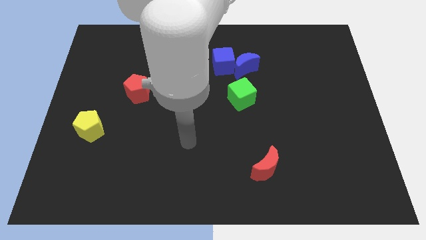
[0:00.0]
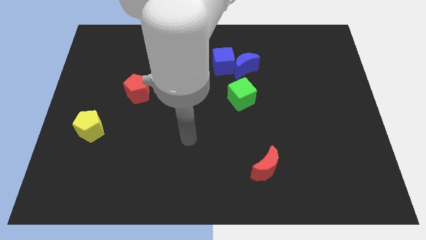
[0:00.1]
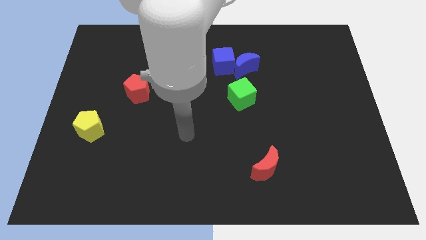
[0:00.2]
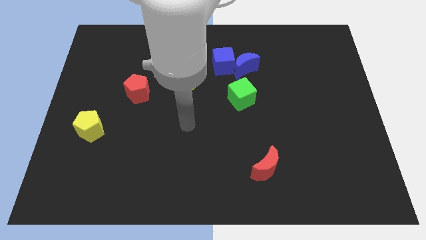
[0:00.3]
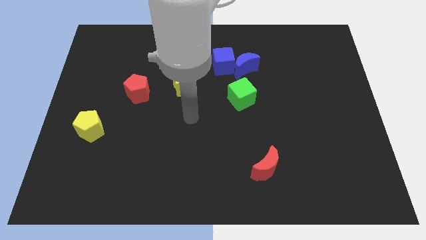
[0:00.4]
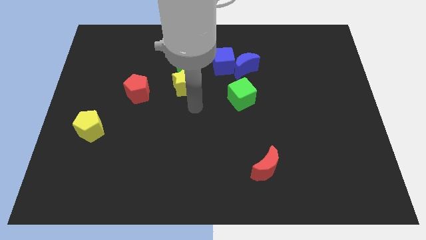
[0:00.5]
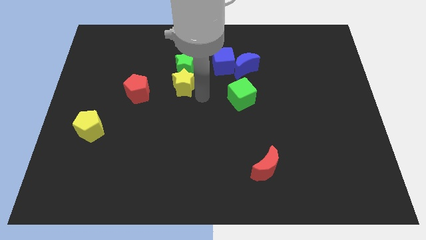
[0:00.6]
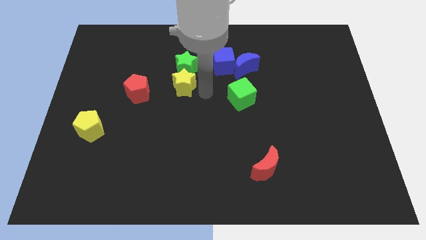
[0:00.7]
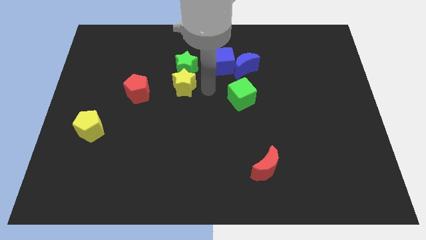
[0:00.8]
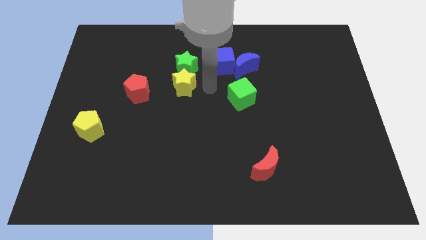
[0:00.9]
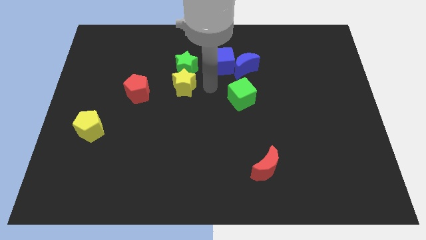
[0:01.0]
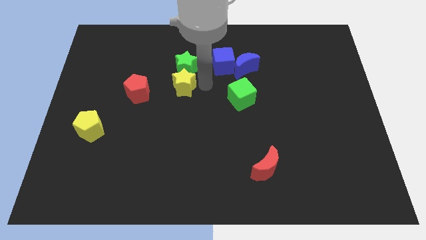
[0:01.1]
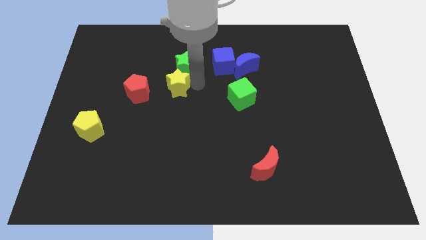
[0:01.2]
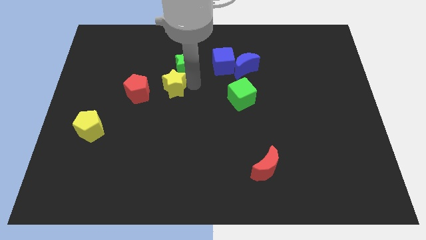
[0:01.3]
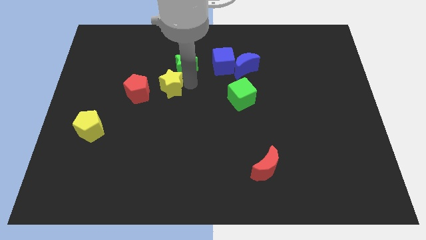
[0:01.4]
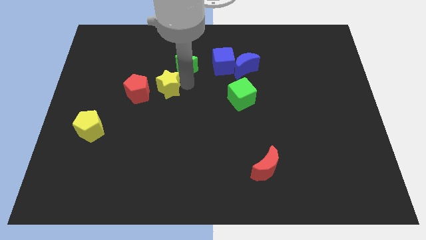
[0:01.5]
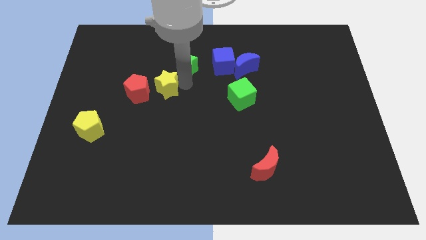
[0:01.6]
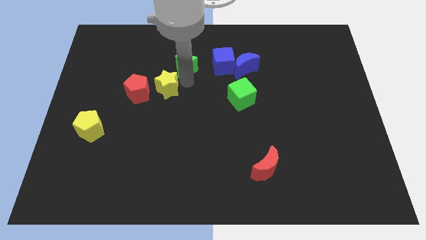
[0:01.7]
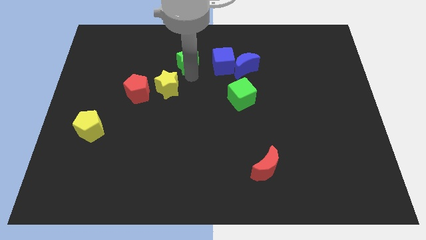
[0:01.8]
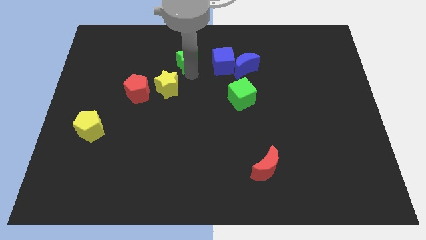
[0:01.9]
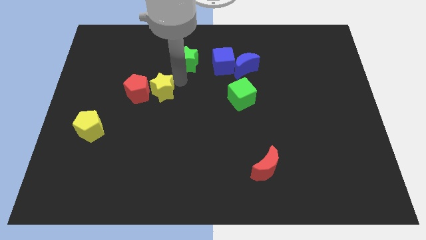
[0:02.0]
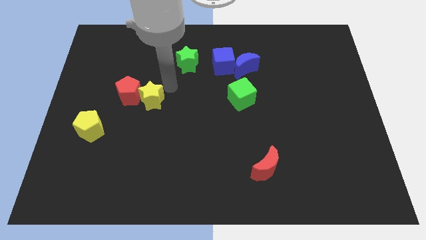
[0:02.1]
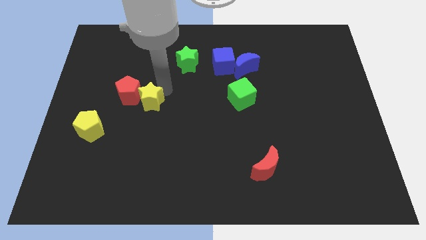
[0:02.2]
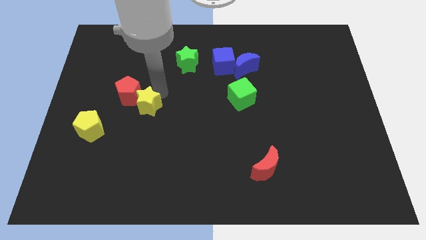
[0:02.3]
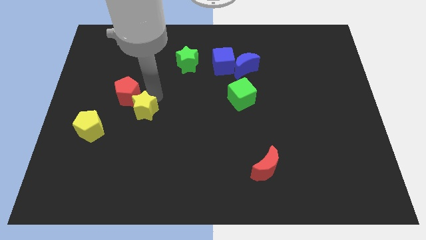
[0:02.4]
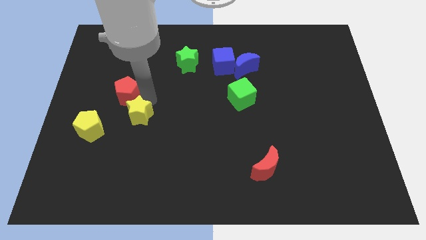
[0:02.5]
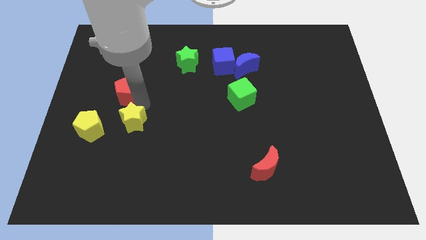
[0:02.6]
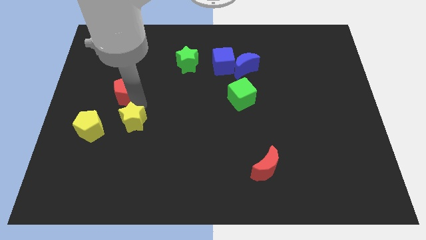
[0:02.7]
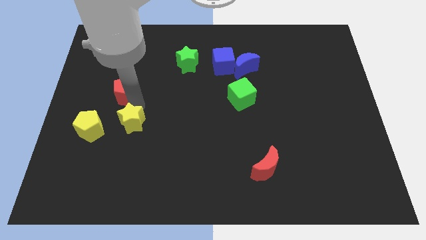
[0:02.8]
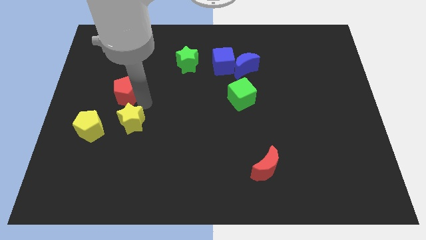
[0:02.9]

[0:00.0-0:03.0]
place the yellow star below the red pentagon

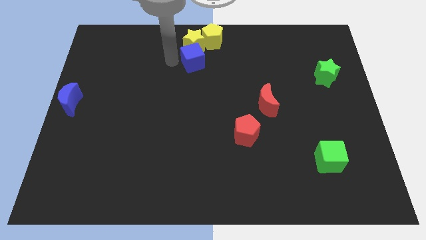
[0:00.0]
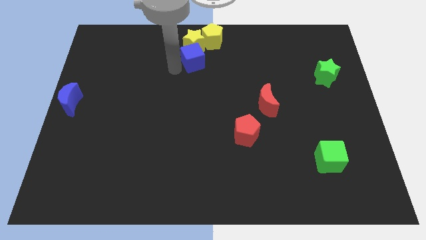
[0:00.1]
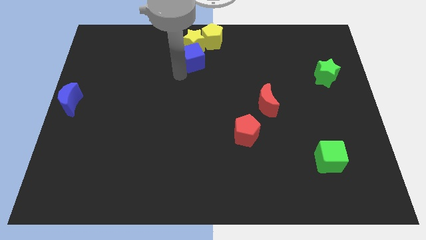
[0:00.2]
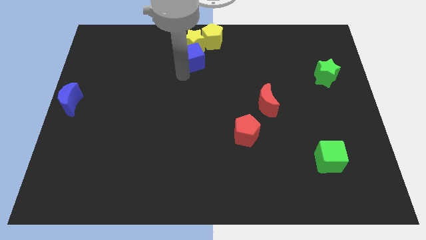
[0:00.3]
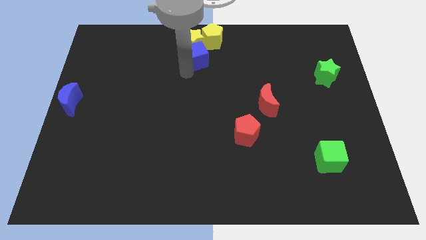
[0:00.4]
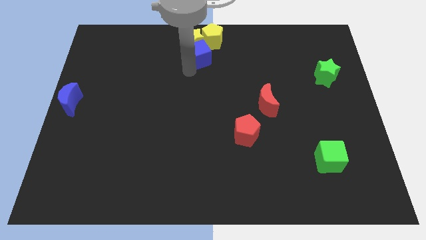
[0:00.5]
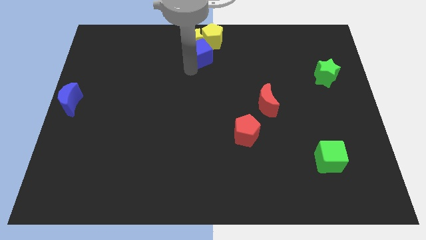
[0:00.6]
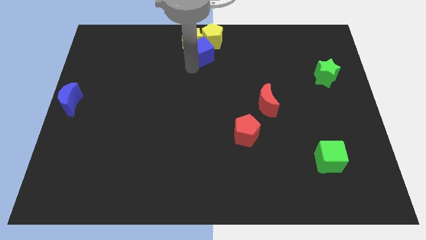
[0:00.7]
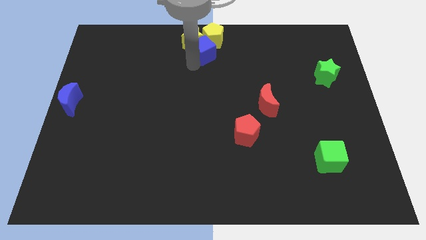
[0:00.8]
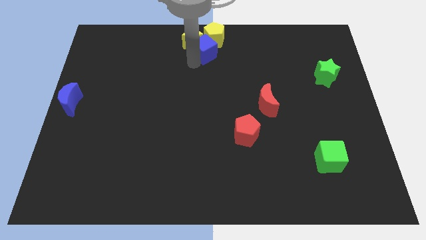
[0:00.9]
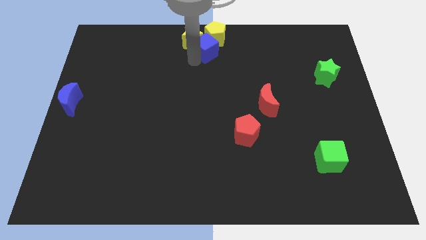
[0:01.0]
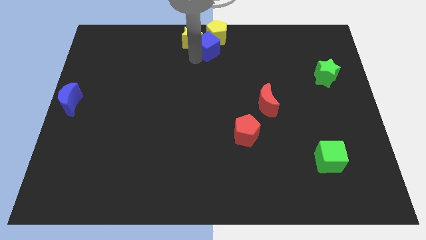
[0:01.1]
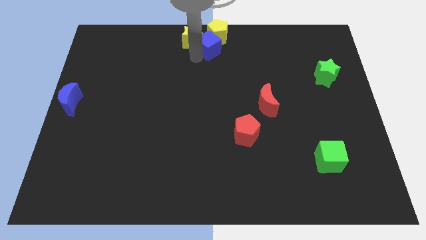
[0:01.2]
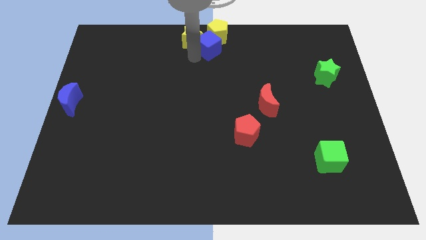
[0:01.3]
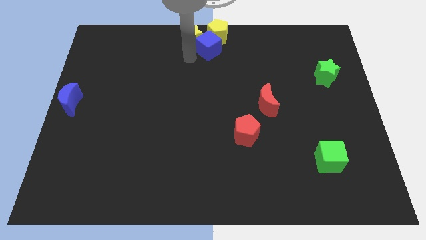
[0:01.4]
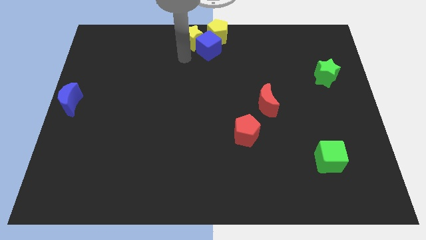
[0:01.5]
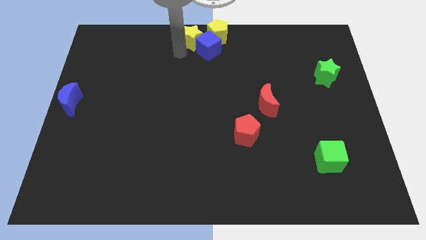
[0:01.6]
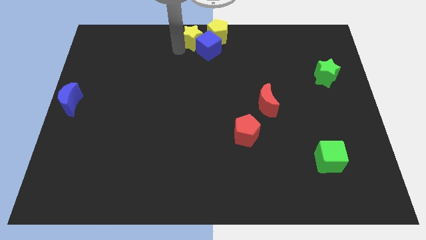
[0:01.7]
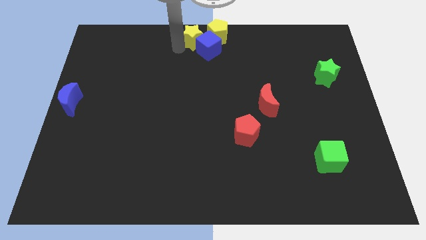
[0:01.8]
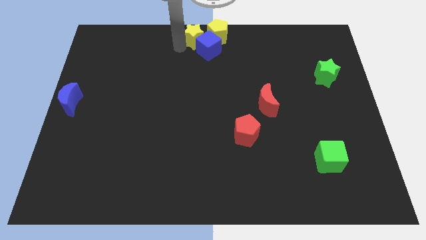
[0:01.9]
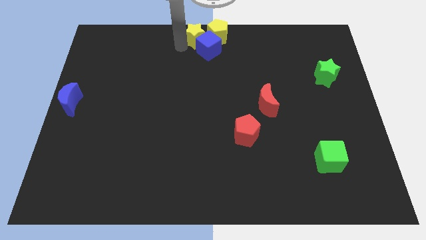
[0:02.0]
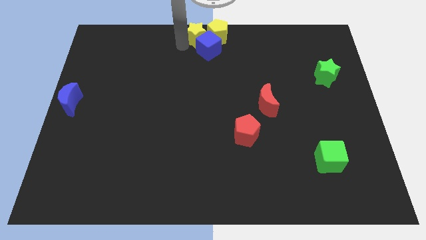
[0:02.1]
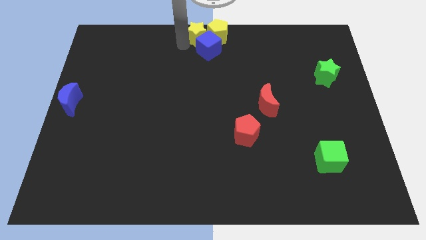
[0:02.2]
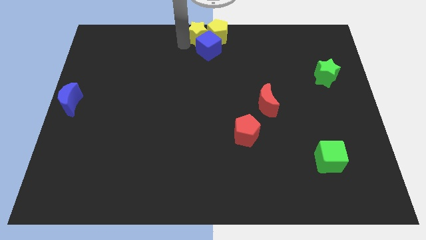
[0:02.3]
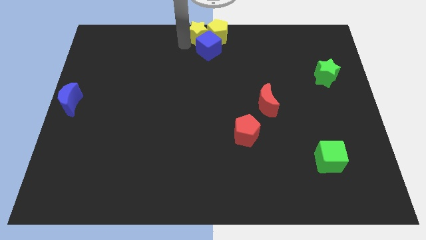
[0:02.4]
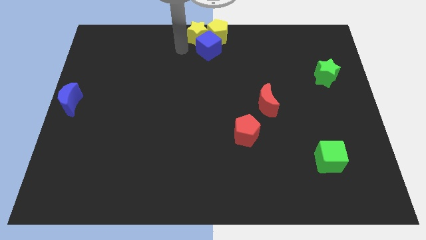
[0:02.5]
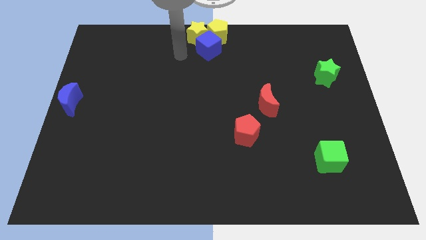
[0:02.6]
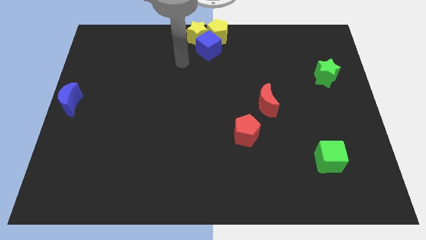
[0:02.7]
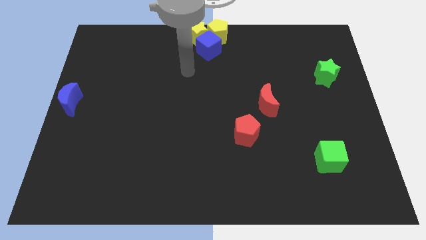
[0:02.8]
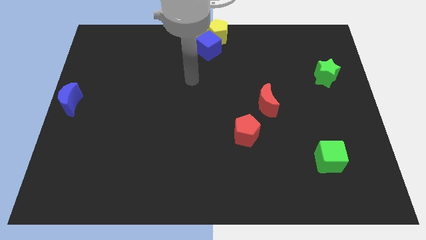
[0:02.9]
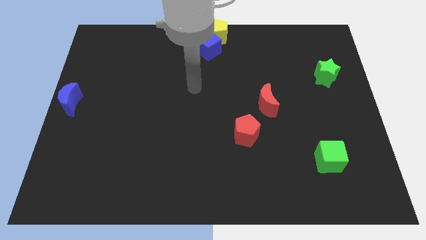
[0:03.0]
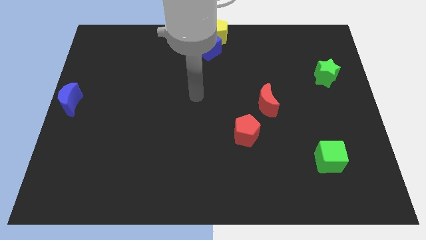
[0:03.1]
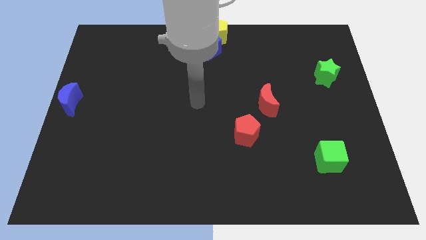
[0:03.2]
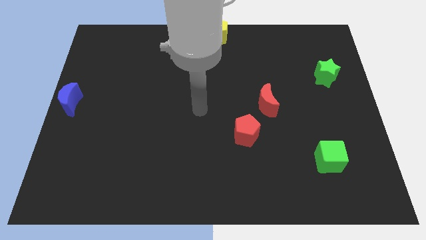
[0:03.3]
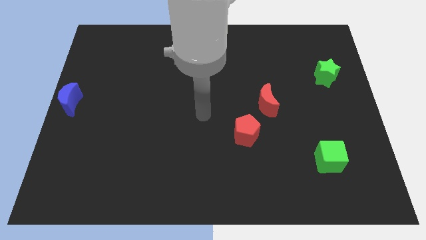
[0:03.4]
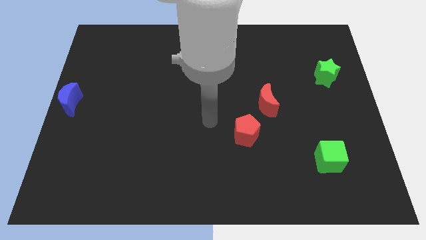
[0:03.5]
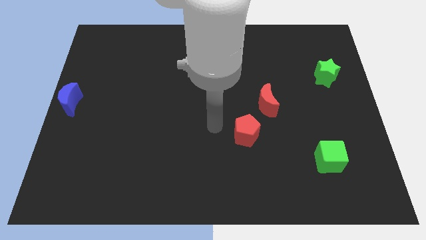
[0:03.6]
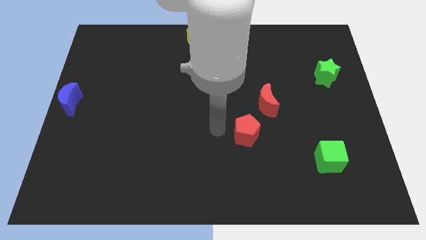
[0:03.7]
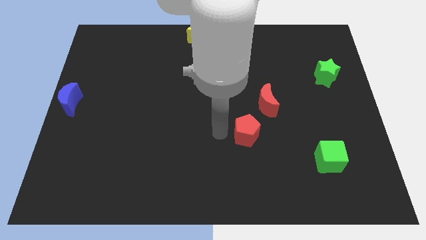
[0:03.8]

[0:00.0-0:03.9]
push the blue cube towards the bottom of both yellow star and yellow pentagon

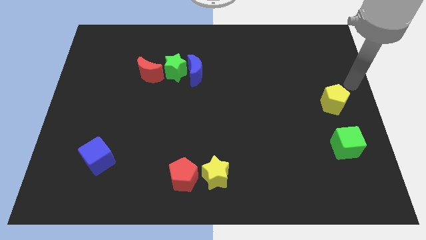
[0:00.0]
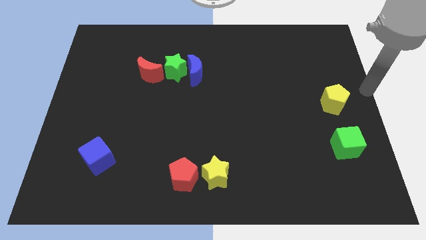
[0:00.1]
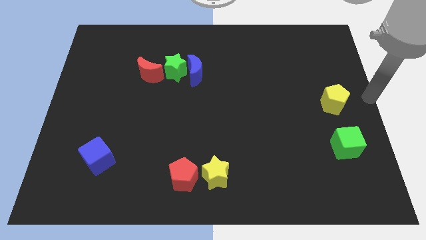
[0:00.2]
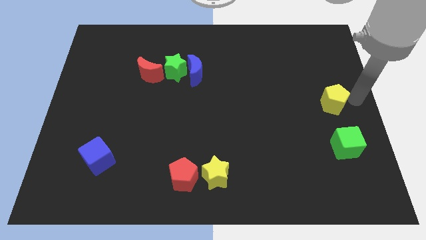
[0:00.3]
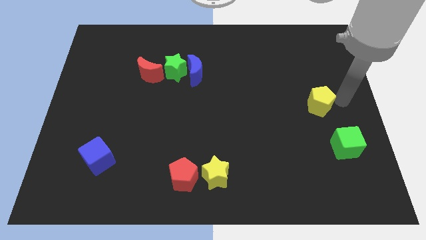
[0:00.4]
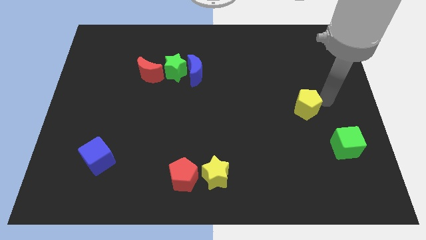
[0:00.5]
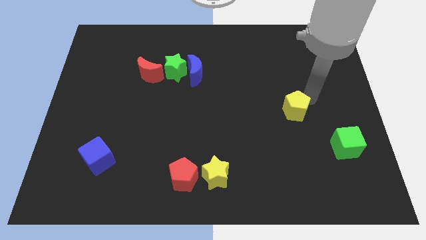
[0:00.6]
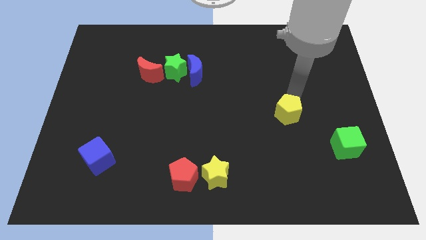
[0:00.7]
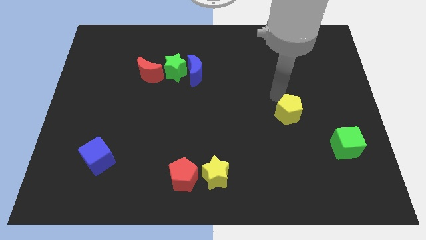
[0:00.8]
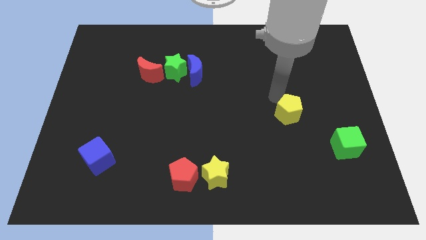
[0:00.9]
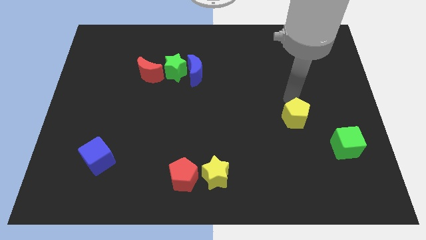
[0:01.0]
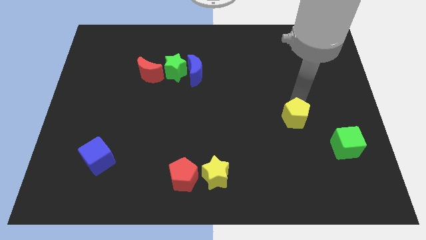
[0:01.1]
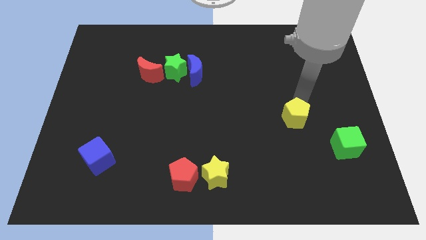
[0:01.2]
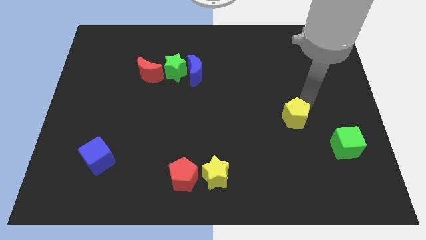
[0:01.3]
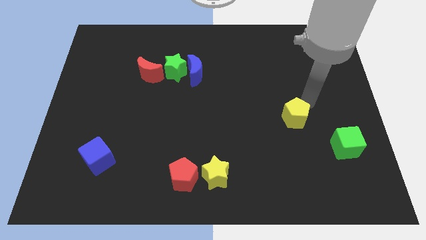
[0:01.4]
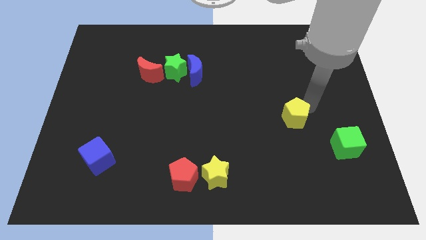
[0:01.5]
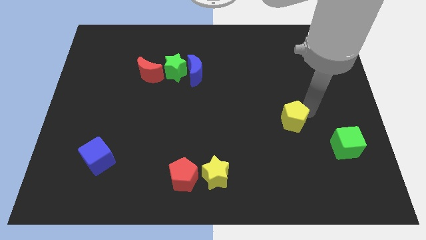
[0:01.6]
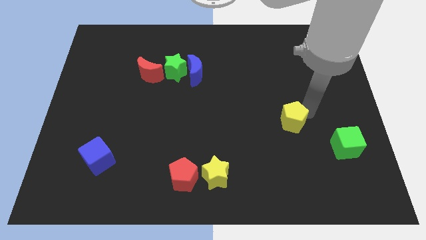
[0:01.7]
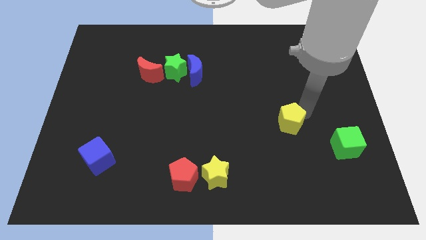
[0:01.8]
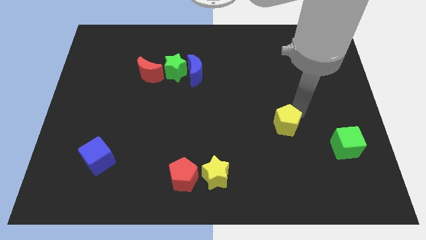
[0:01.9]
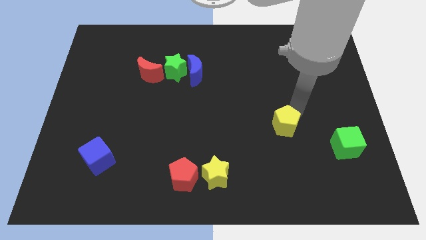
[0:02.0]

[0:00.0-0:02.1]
move yellow pentagon towards left of the green cube
